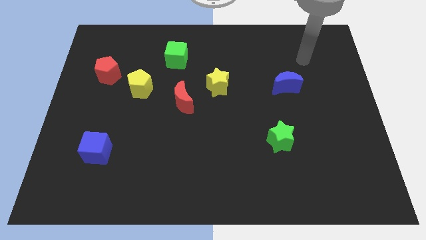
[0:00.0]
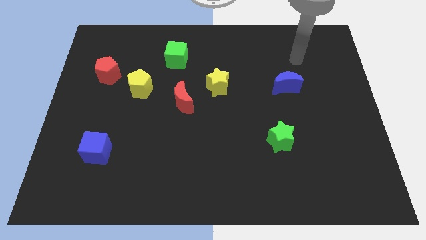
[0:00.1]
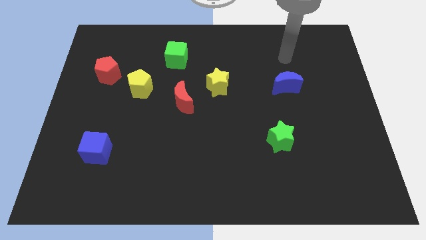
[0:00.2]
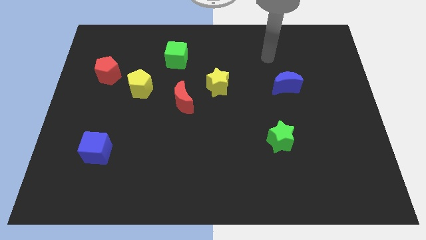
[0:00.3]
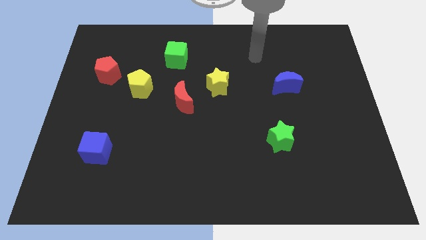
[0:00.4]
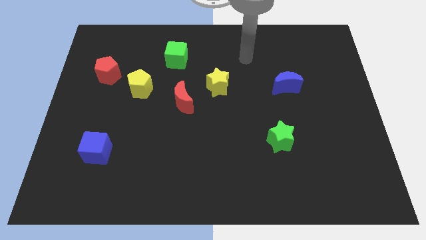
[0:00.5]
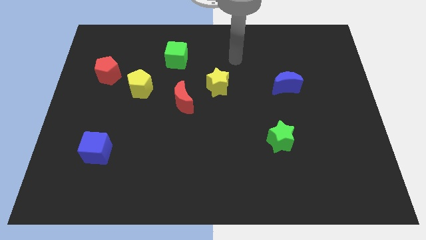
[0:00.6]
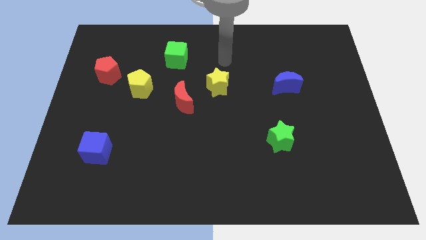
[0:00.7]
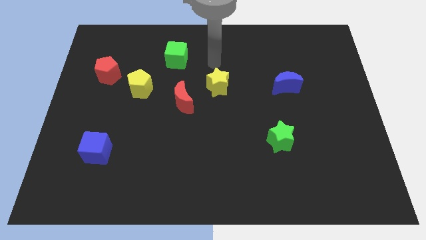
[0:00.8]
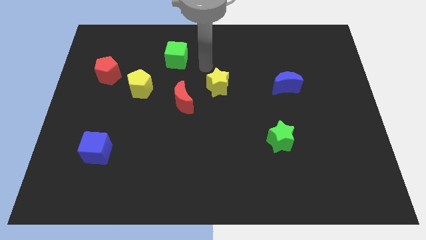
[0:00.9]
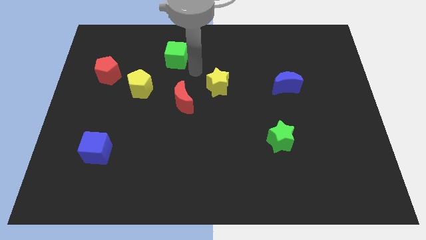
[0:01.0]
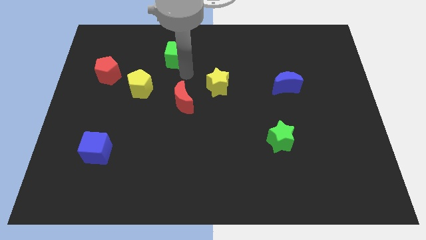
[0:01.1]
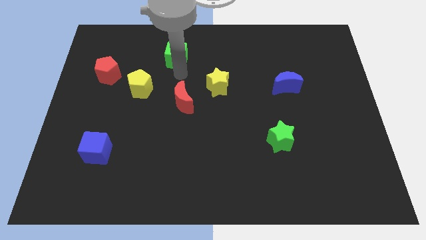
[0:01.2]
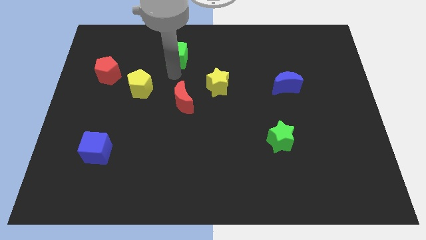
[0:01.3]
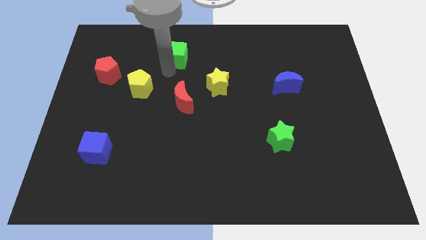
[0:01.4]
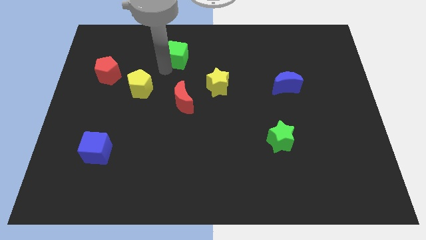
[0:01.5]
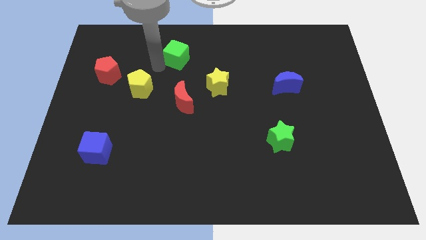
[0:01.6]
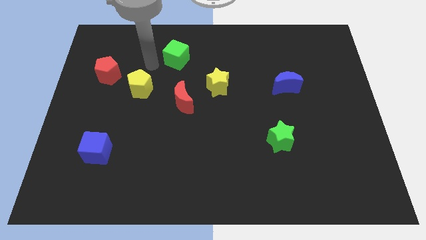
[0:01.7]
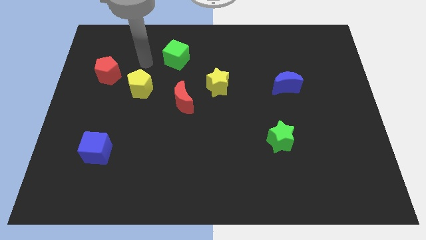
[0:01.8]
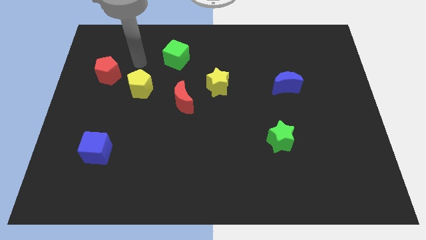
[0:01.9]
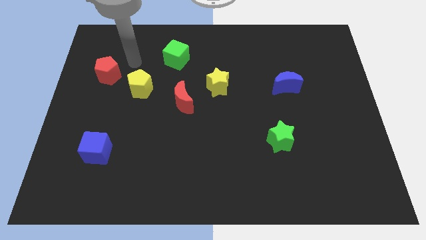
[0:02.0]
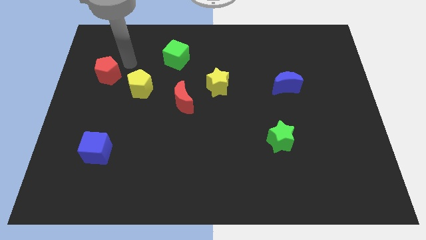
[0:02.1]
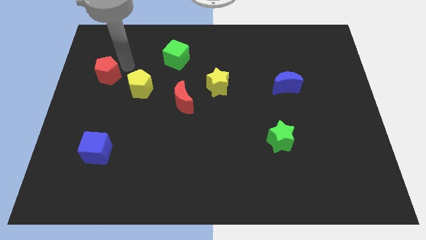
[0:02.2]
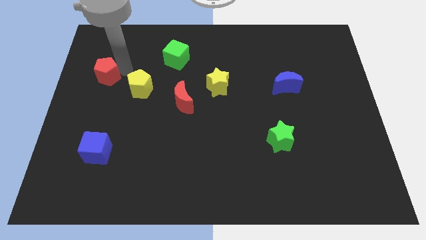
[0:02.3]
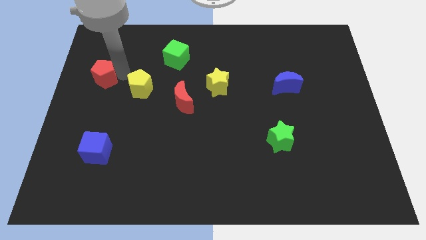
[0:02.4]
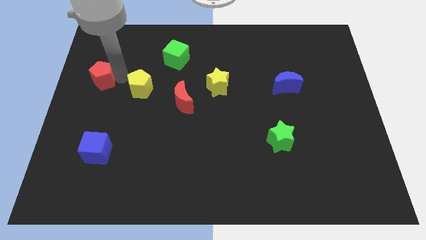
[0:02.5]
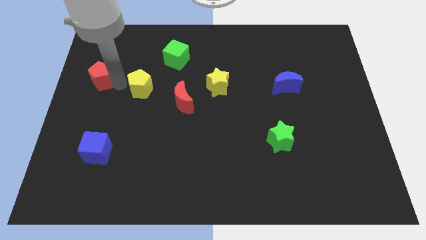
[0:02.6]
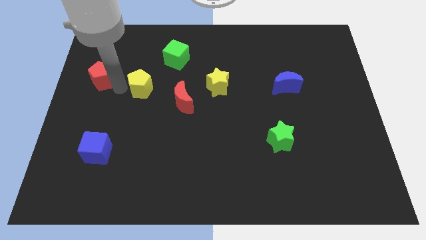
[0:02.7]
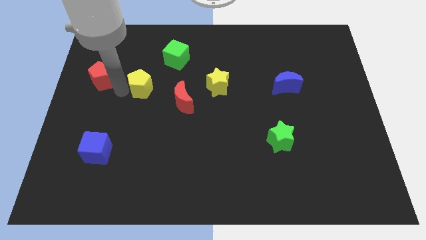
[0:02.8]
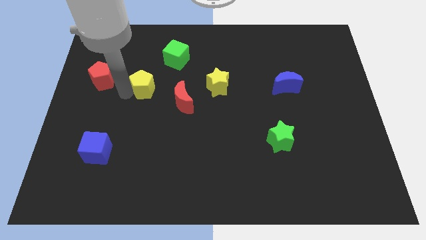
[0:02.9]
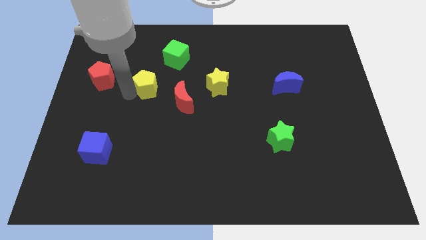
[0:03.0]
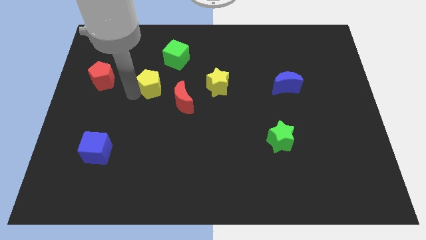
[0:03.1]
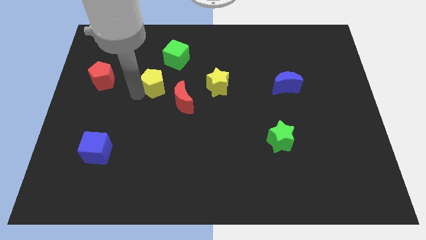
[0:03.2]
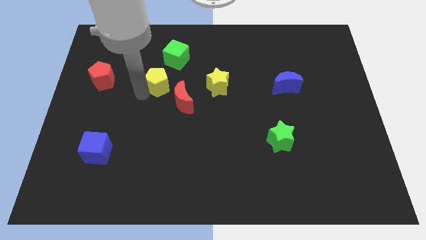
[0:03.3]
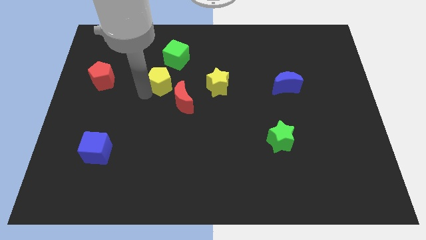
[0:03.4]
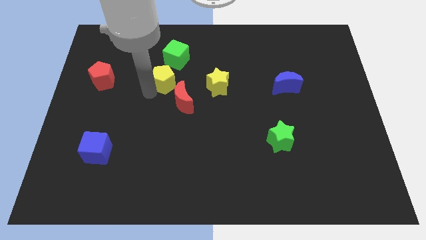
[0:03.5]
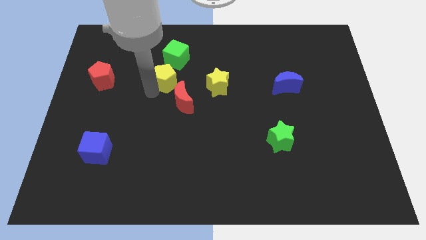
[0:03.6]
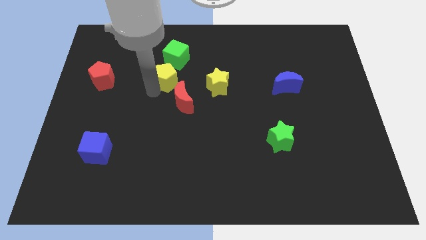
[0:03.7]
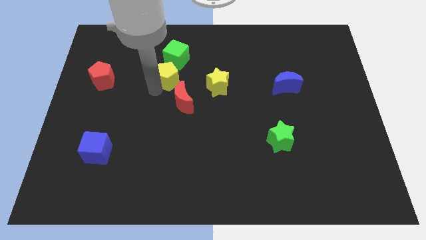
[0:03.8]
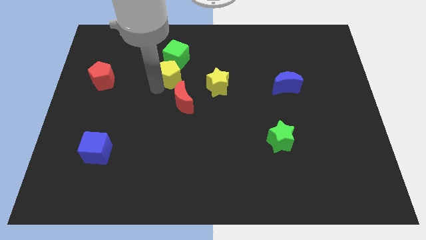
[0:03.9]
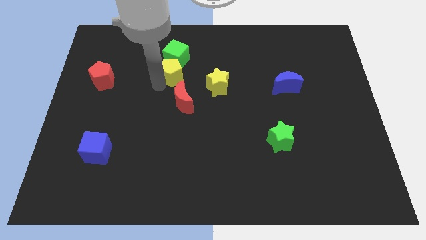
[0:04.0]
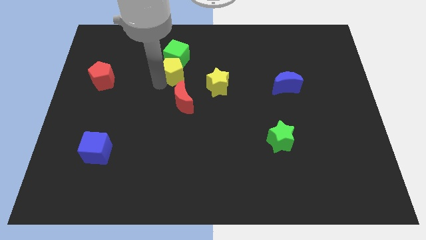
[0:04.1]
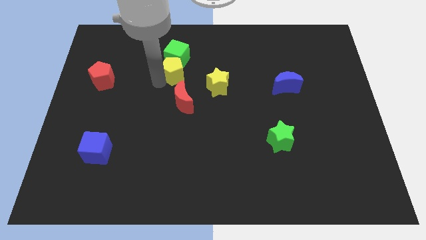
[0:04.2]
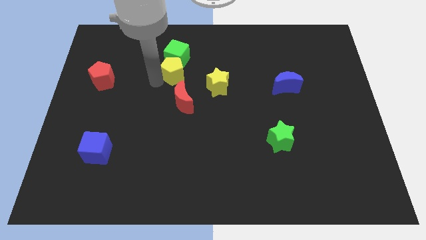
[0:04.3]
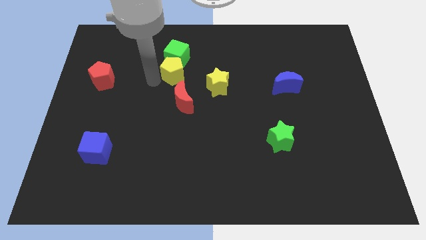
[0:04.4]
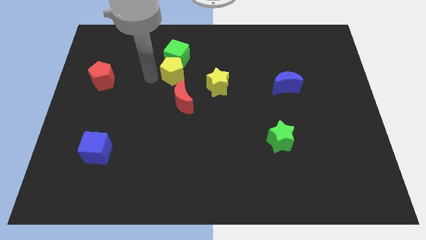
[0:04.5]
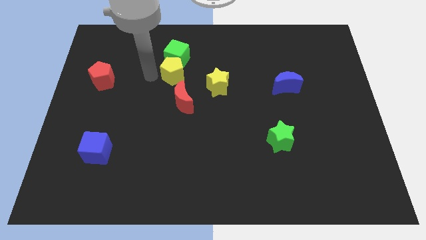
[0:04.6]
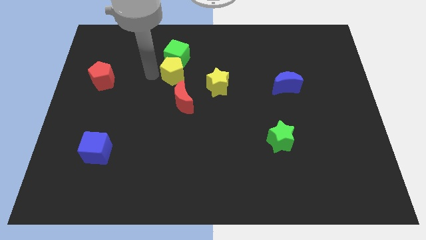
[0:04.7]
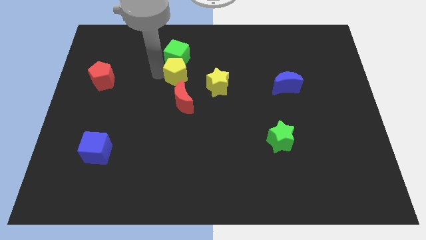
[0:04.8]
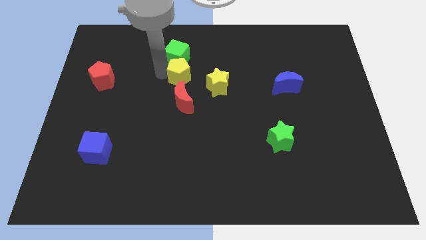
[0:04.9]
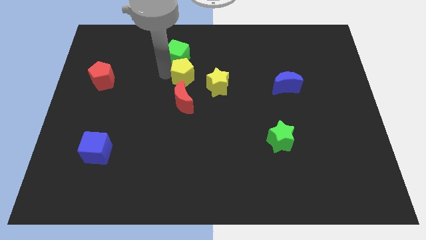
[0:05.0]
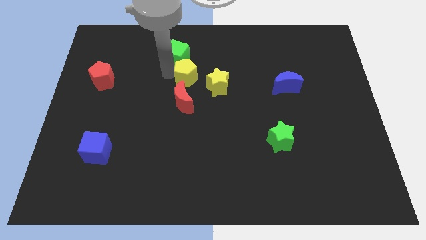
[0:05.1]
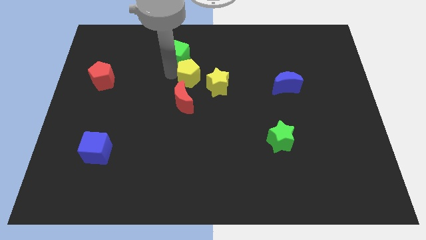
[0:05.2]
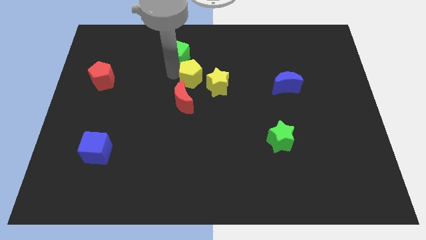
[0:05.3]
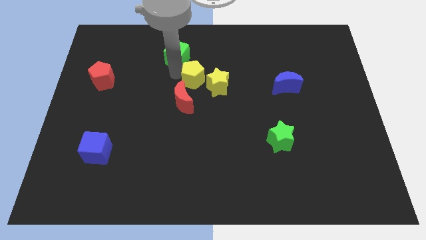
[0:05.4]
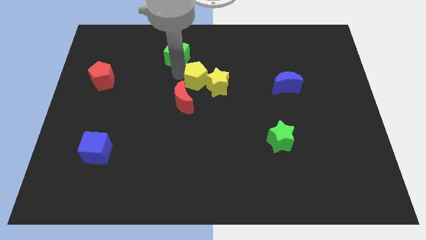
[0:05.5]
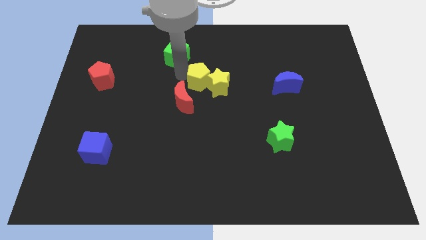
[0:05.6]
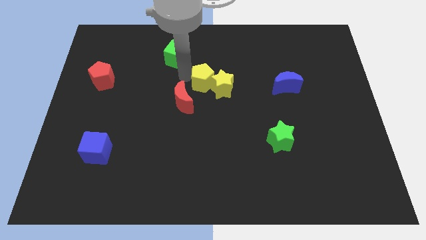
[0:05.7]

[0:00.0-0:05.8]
push the yellow pentagon towards the yellow star

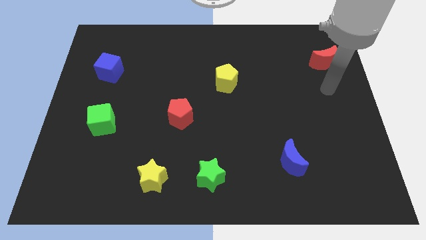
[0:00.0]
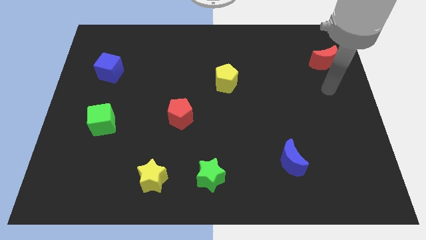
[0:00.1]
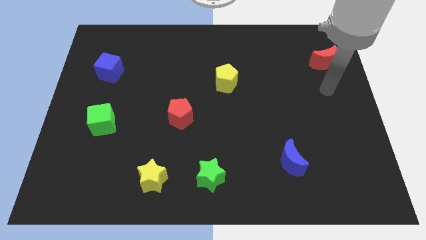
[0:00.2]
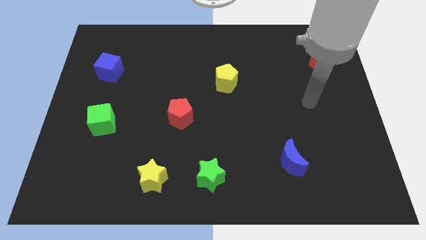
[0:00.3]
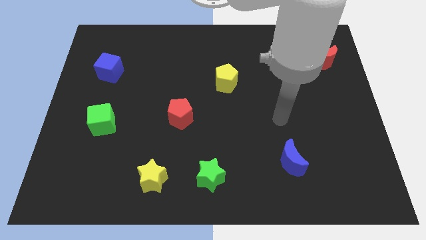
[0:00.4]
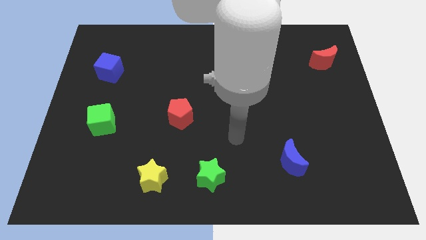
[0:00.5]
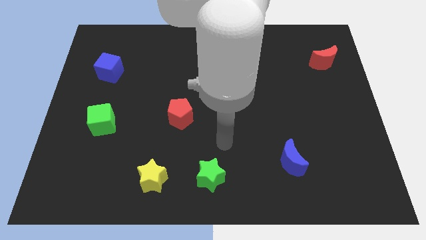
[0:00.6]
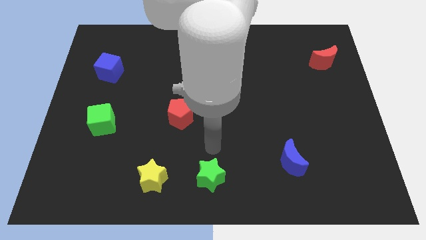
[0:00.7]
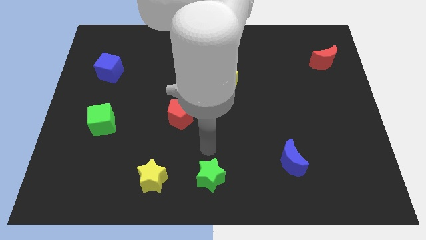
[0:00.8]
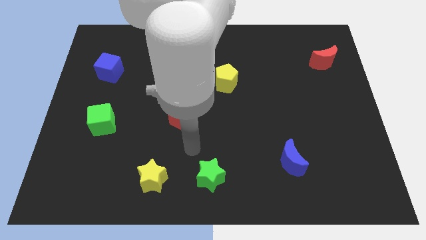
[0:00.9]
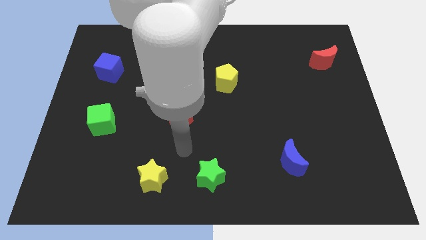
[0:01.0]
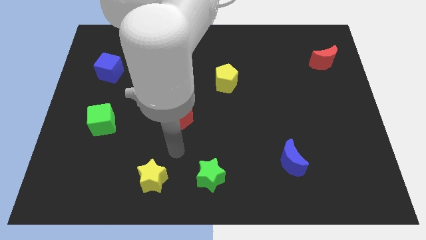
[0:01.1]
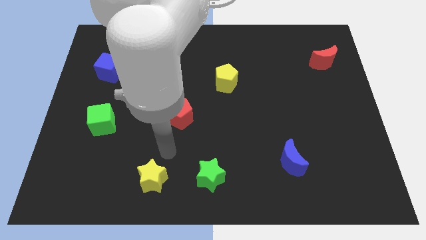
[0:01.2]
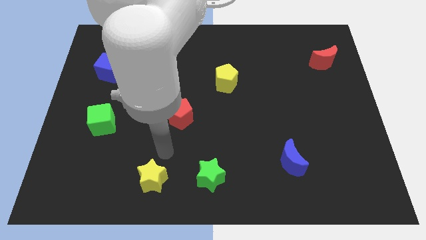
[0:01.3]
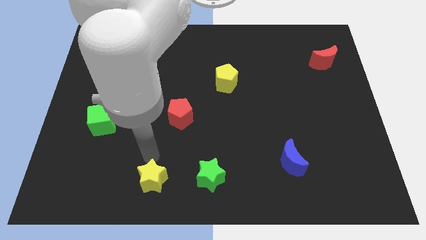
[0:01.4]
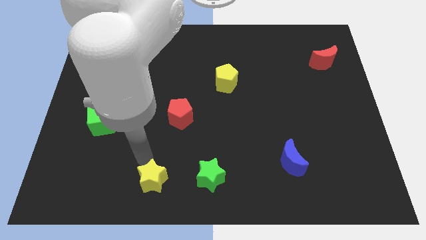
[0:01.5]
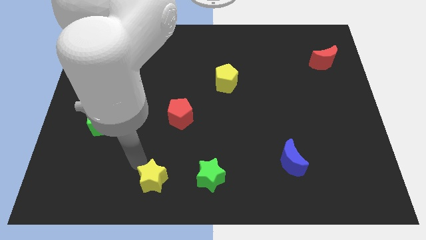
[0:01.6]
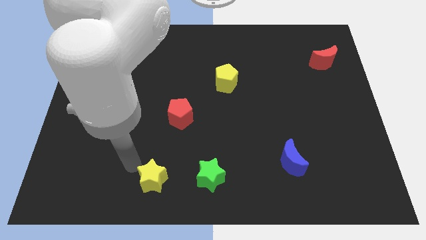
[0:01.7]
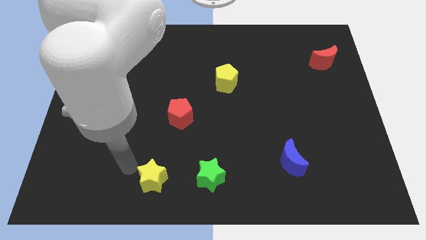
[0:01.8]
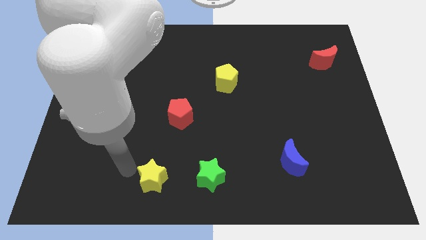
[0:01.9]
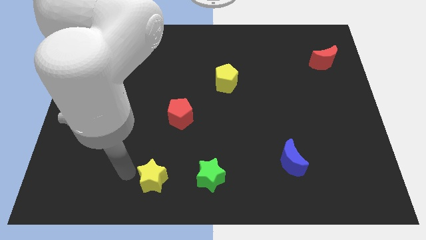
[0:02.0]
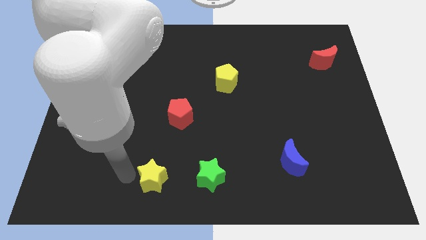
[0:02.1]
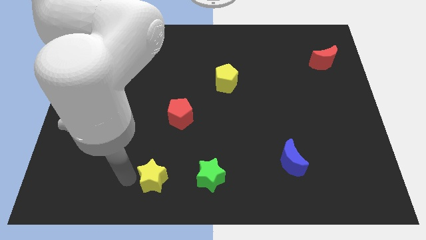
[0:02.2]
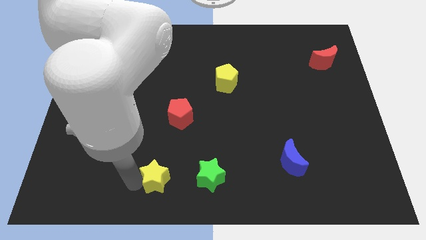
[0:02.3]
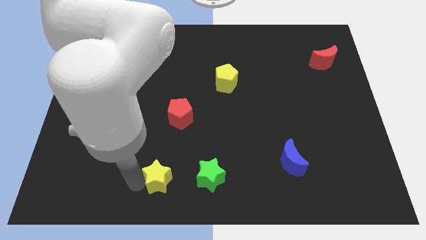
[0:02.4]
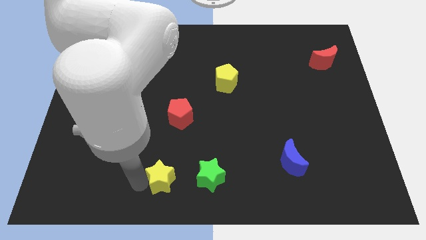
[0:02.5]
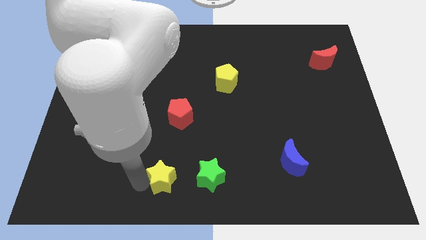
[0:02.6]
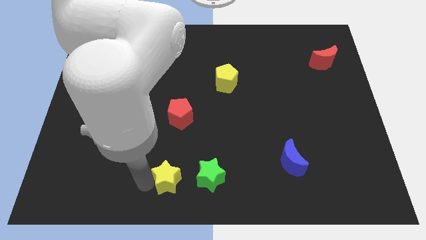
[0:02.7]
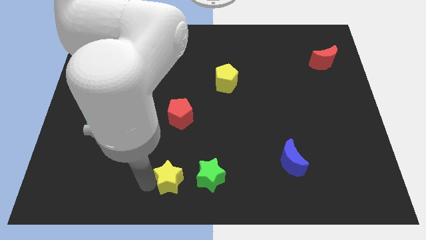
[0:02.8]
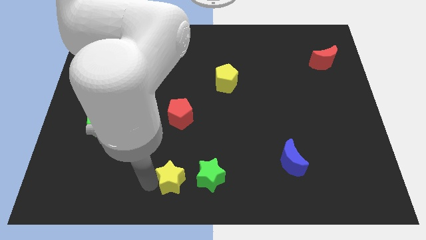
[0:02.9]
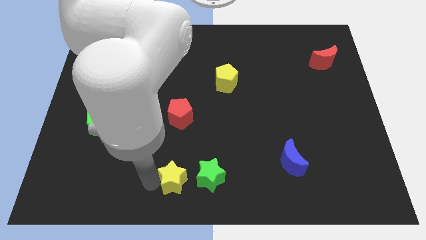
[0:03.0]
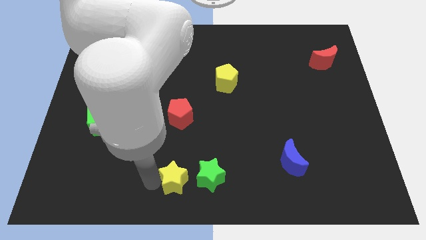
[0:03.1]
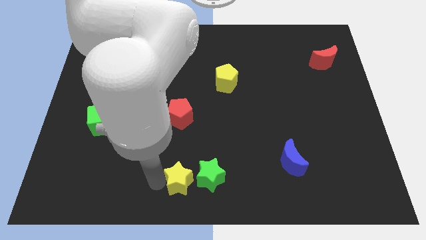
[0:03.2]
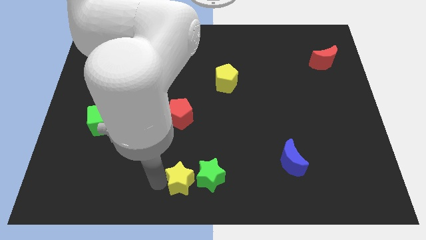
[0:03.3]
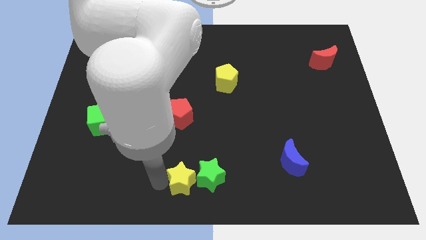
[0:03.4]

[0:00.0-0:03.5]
slide the yellow star close to the green star
